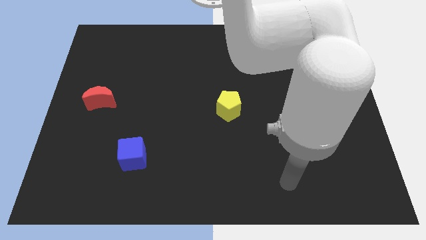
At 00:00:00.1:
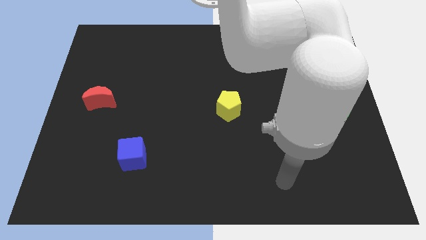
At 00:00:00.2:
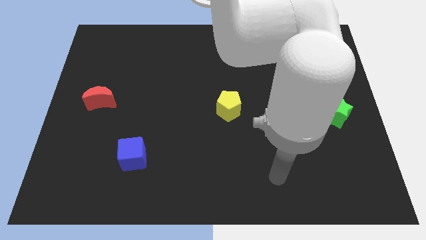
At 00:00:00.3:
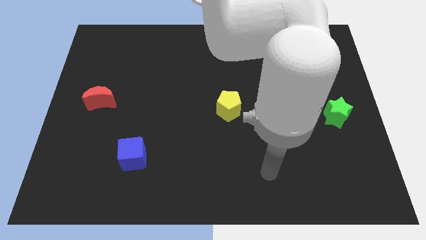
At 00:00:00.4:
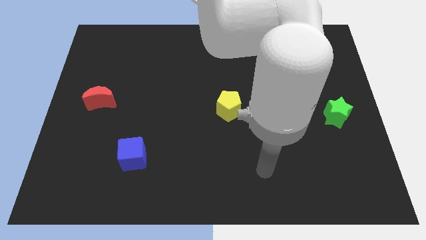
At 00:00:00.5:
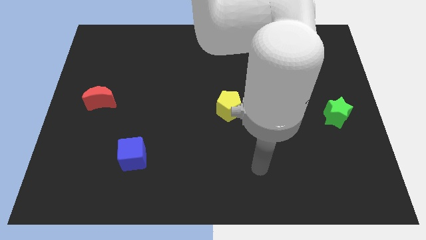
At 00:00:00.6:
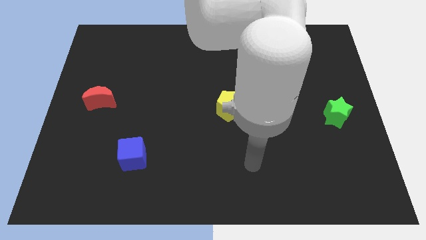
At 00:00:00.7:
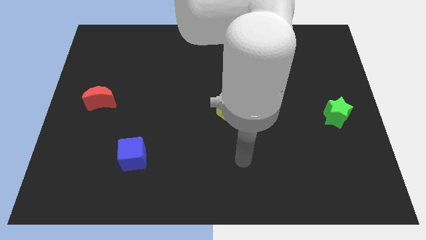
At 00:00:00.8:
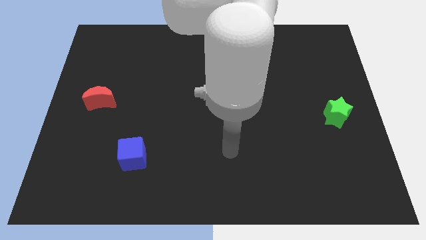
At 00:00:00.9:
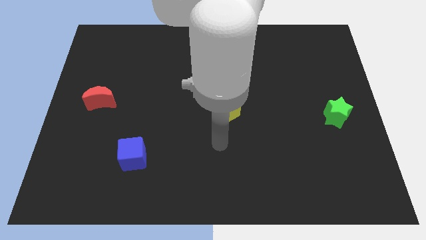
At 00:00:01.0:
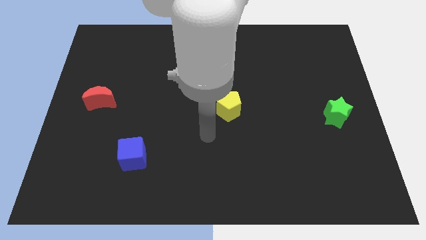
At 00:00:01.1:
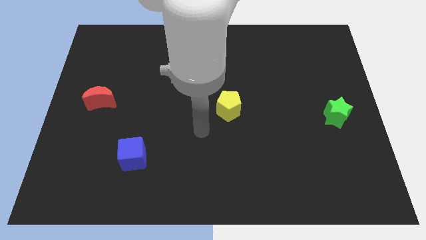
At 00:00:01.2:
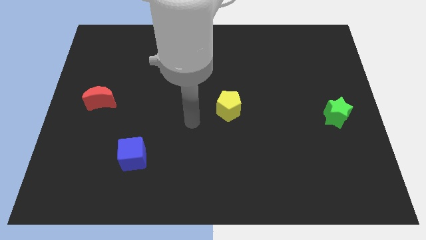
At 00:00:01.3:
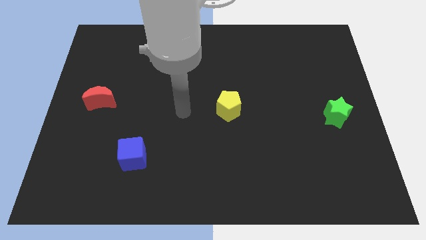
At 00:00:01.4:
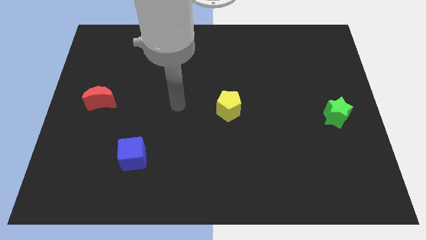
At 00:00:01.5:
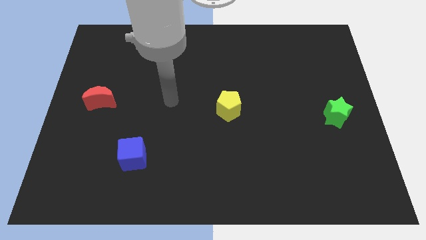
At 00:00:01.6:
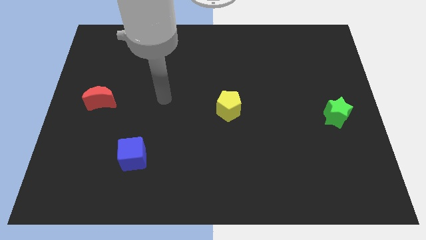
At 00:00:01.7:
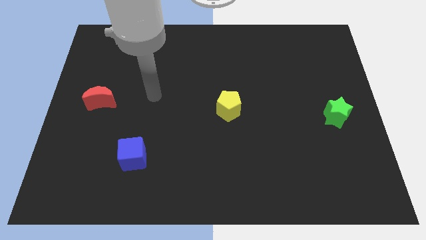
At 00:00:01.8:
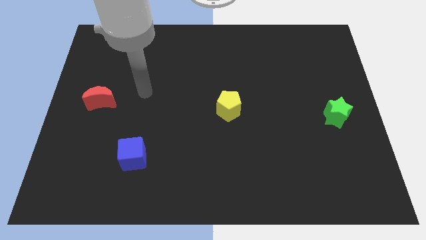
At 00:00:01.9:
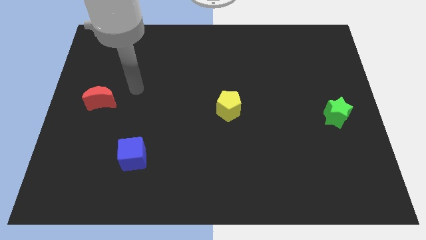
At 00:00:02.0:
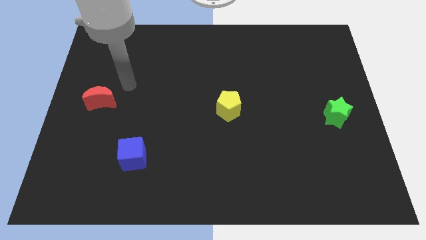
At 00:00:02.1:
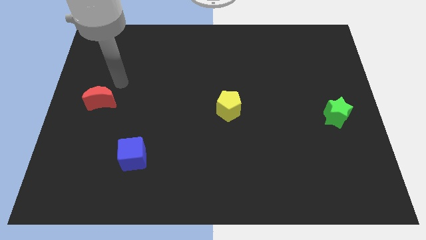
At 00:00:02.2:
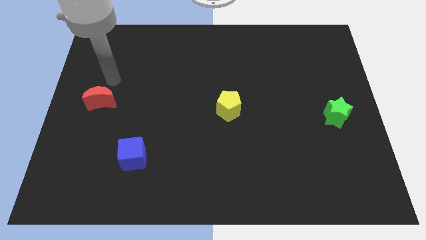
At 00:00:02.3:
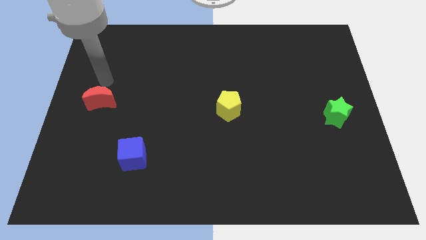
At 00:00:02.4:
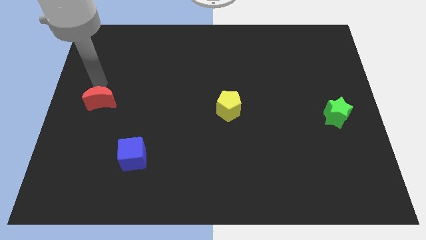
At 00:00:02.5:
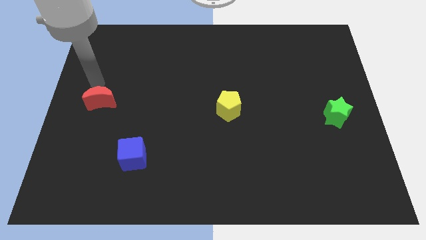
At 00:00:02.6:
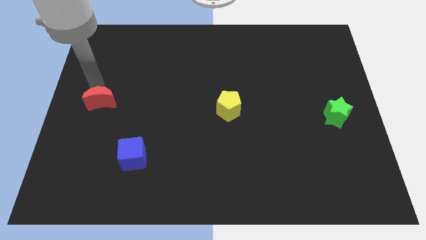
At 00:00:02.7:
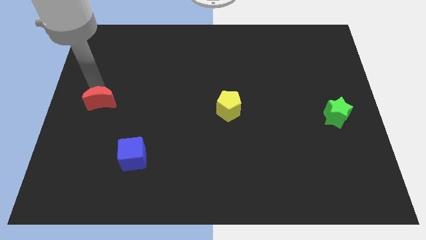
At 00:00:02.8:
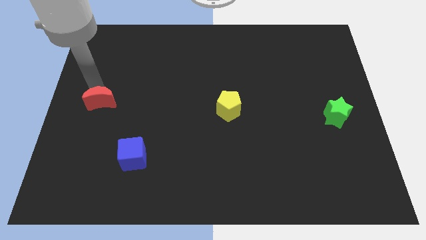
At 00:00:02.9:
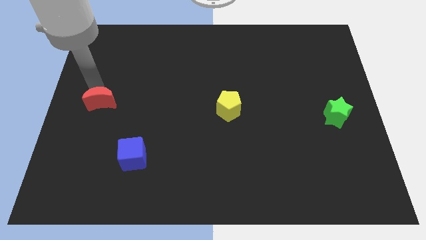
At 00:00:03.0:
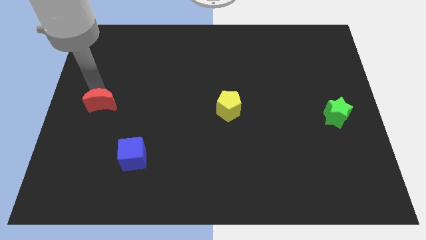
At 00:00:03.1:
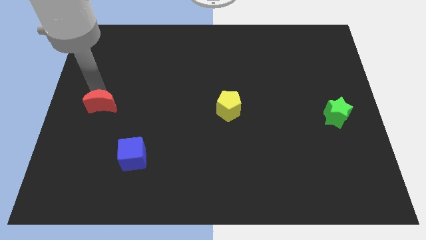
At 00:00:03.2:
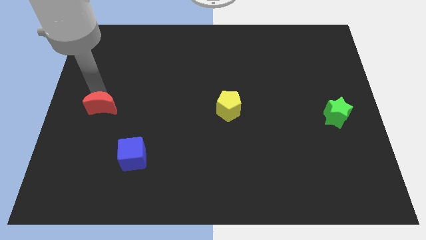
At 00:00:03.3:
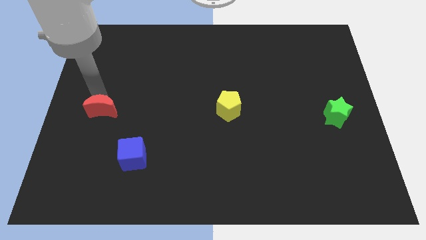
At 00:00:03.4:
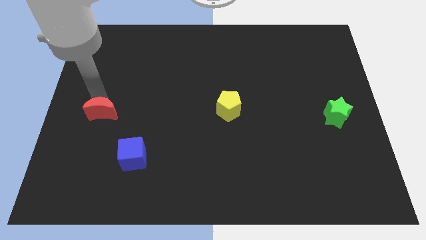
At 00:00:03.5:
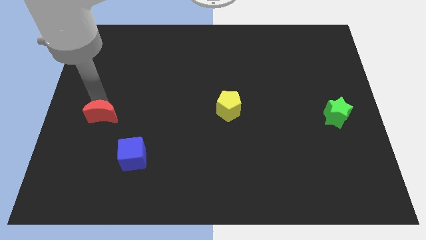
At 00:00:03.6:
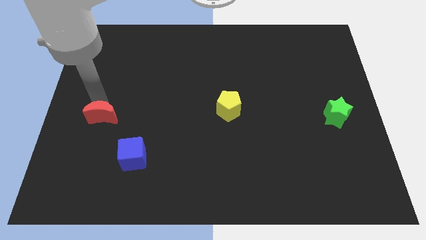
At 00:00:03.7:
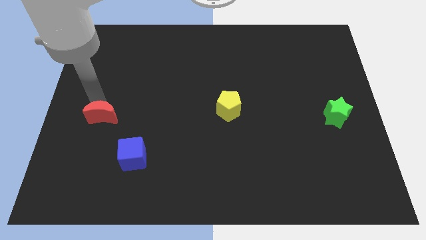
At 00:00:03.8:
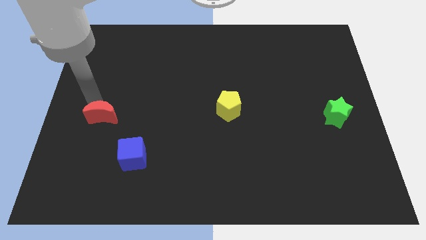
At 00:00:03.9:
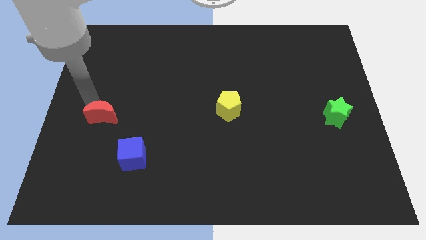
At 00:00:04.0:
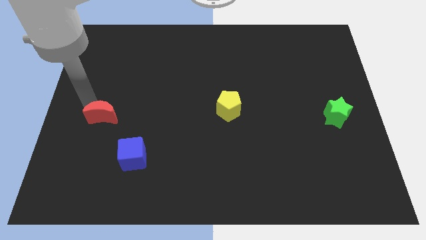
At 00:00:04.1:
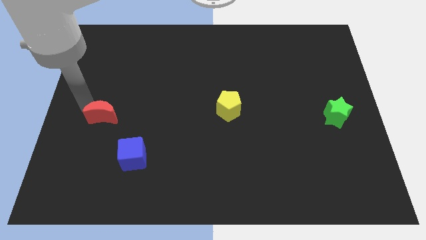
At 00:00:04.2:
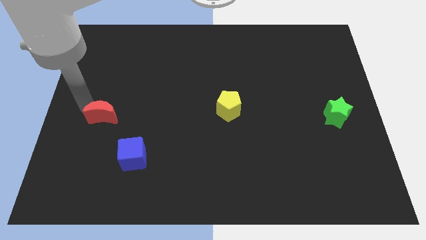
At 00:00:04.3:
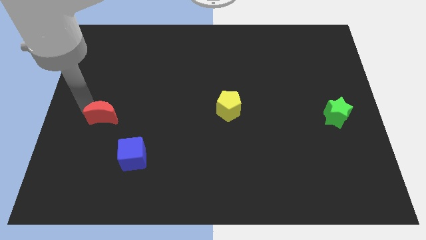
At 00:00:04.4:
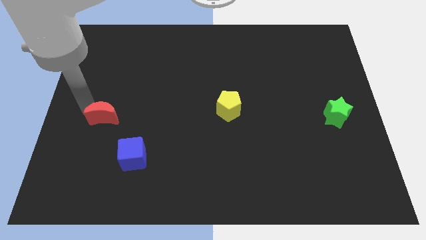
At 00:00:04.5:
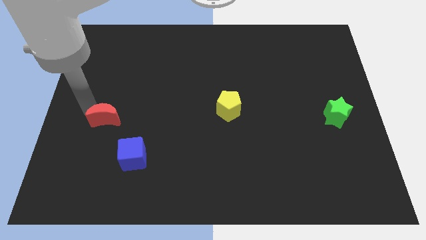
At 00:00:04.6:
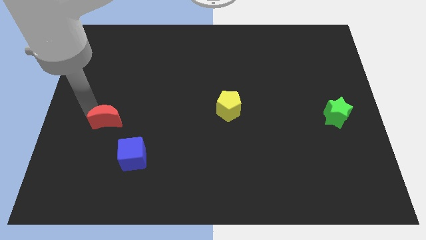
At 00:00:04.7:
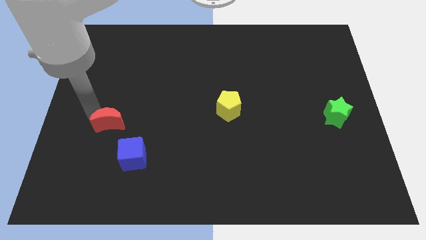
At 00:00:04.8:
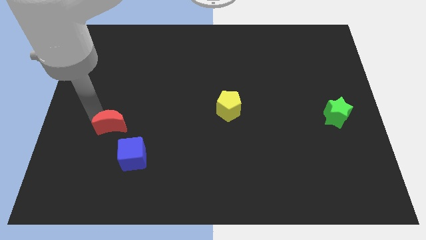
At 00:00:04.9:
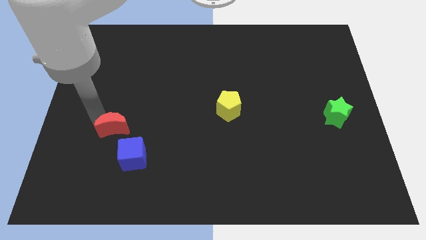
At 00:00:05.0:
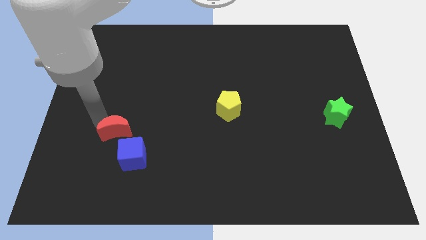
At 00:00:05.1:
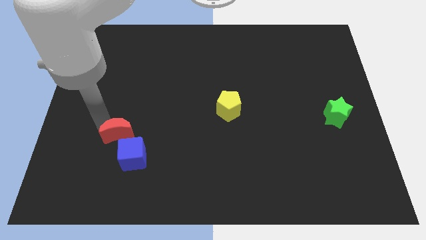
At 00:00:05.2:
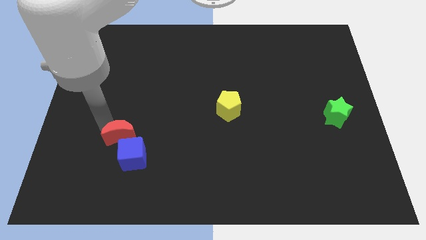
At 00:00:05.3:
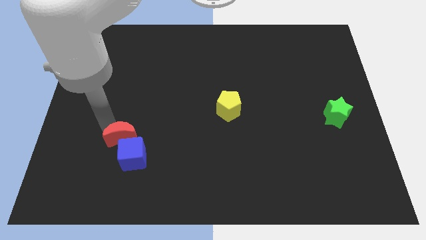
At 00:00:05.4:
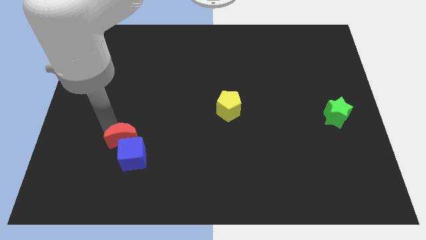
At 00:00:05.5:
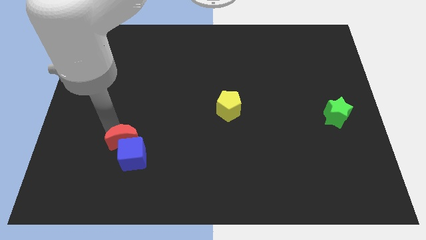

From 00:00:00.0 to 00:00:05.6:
push the red moon towards the cube

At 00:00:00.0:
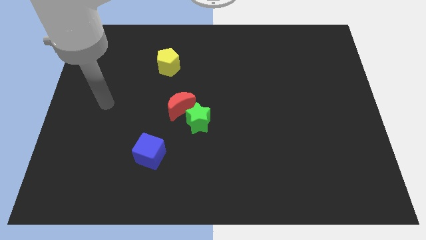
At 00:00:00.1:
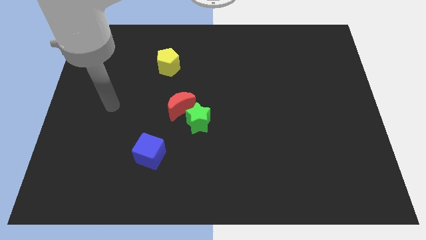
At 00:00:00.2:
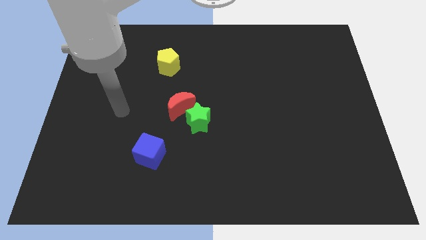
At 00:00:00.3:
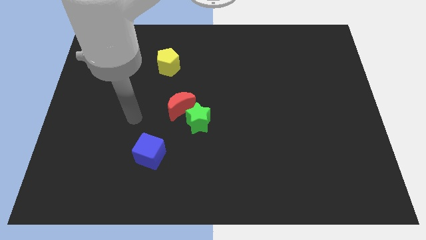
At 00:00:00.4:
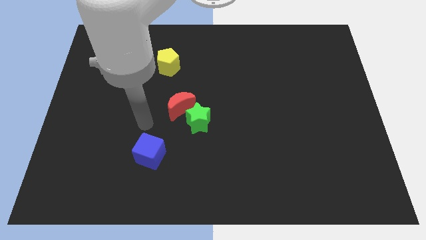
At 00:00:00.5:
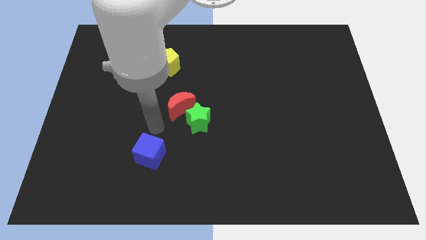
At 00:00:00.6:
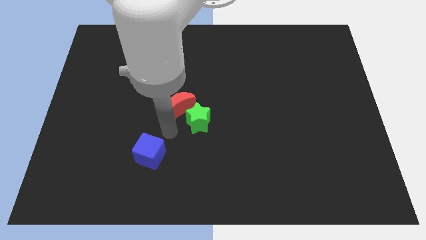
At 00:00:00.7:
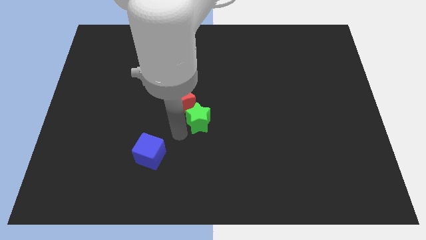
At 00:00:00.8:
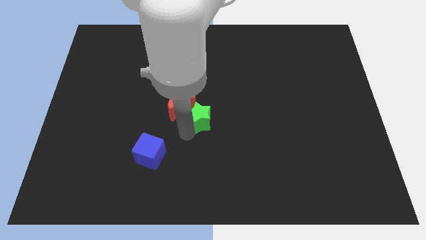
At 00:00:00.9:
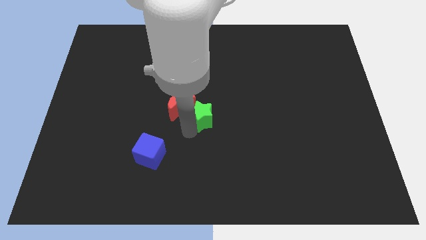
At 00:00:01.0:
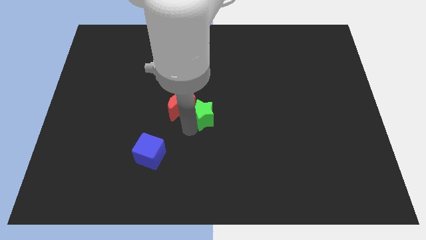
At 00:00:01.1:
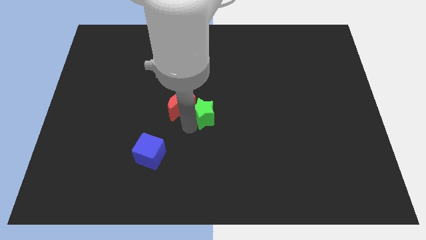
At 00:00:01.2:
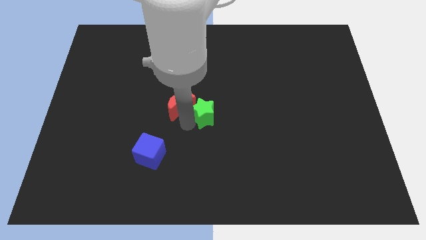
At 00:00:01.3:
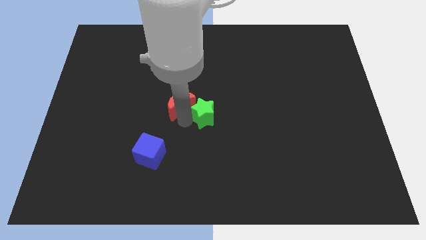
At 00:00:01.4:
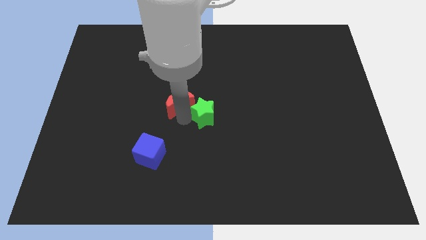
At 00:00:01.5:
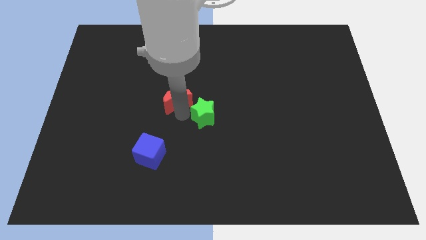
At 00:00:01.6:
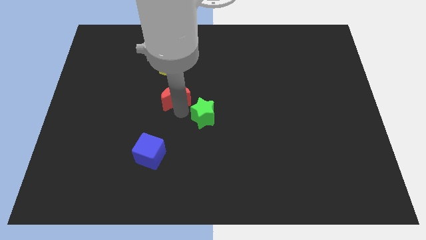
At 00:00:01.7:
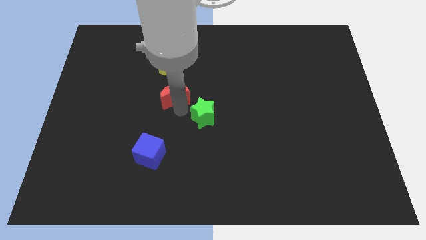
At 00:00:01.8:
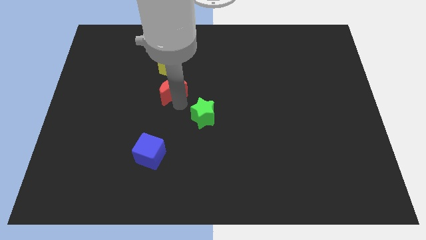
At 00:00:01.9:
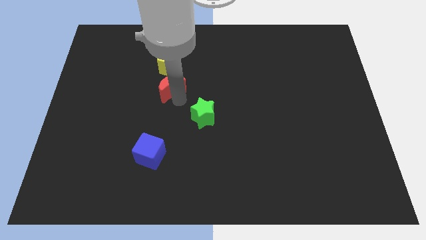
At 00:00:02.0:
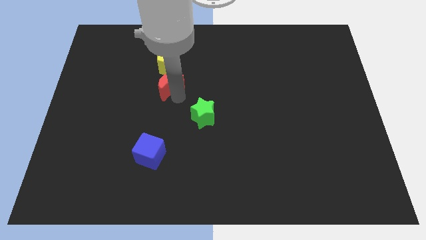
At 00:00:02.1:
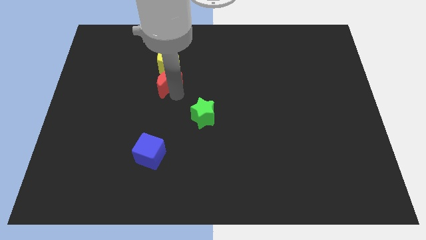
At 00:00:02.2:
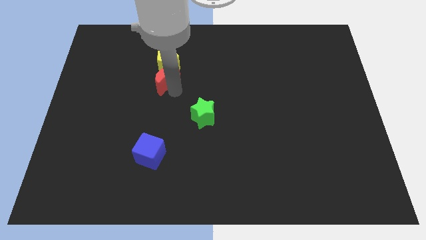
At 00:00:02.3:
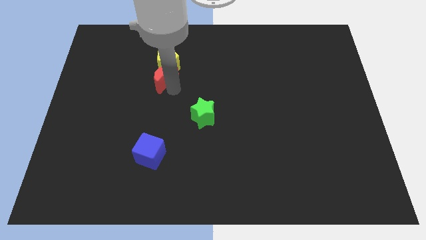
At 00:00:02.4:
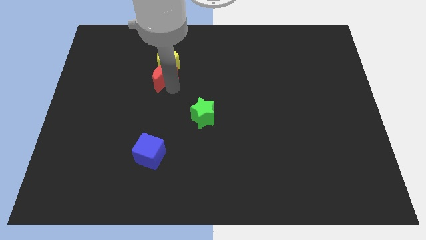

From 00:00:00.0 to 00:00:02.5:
push the red block towards the yellow block

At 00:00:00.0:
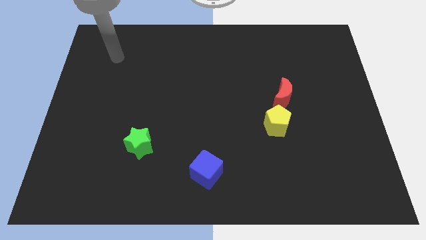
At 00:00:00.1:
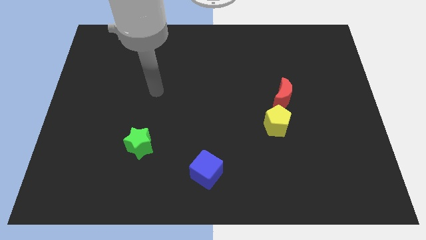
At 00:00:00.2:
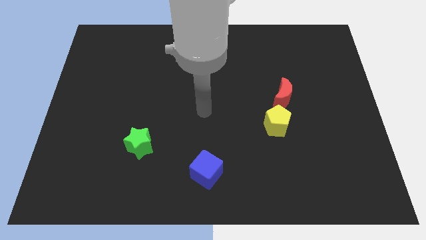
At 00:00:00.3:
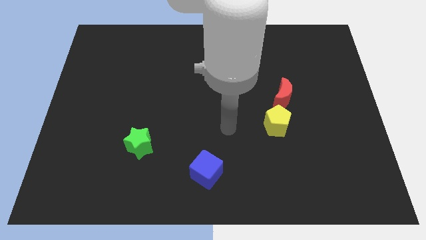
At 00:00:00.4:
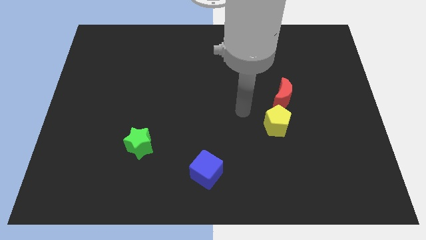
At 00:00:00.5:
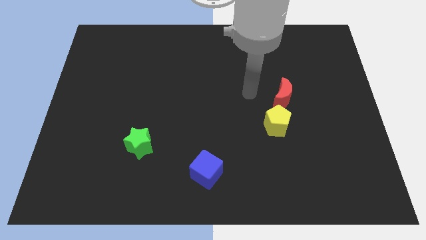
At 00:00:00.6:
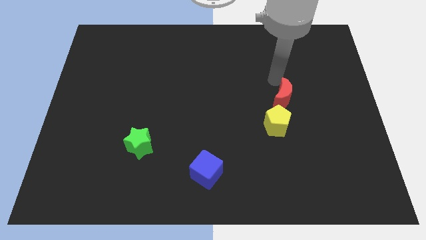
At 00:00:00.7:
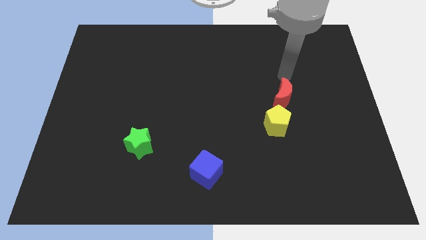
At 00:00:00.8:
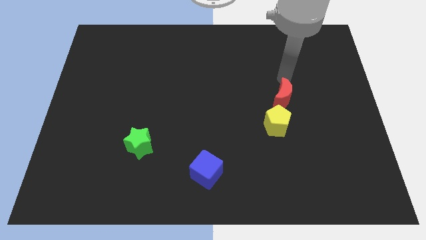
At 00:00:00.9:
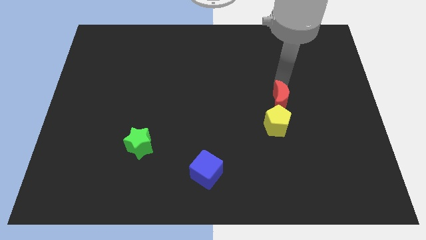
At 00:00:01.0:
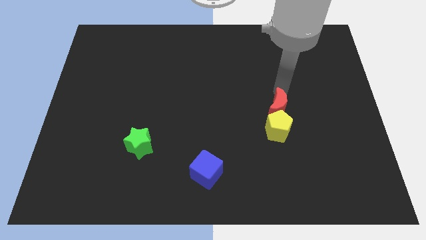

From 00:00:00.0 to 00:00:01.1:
move the moon to the pentagon
